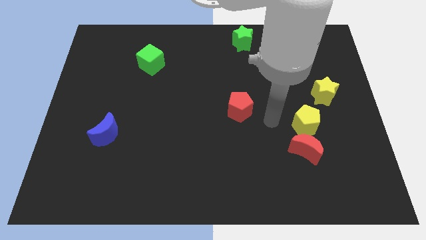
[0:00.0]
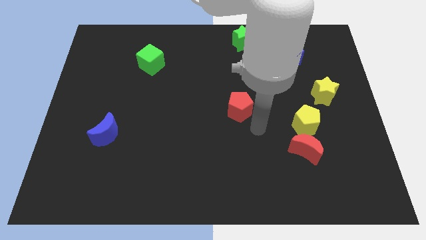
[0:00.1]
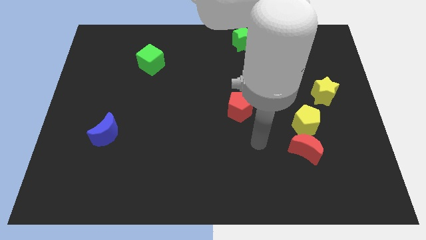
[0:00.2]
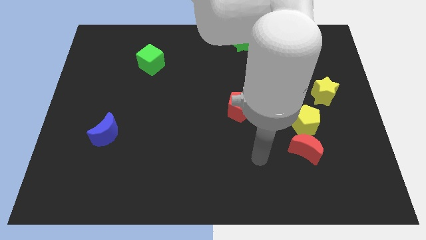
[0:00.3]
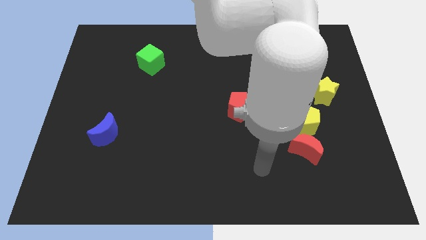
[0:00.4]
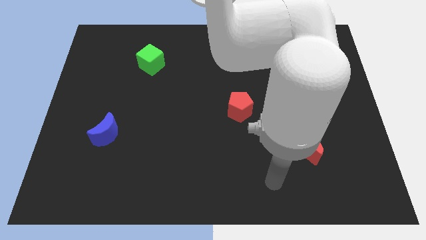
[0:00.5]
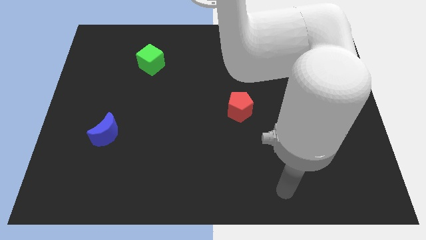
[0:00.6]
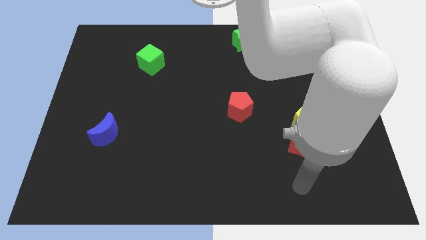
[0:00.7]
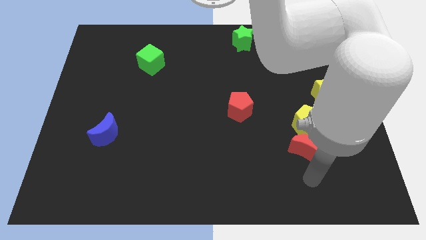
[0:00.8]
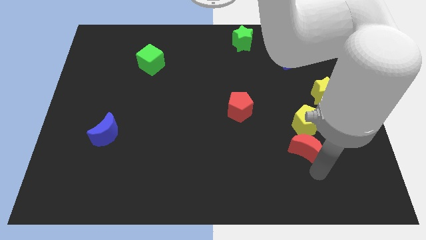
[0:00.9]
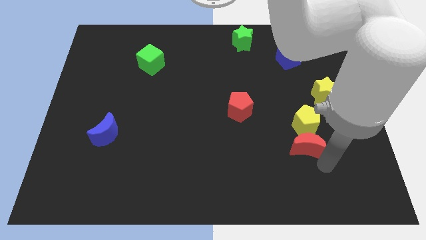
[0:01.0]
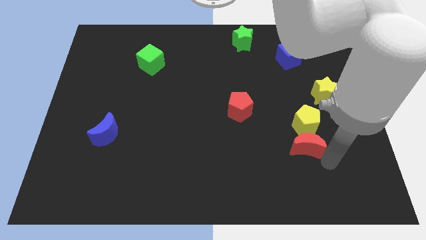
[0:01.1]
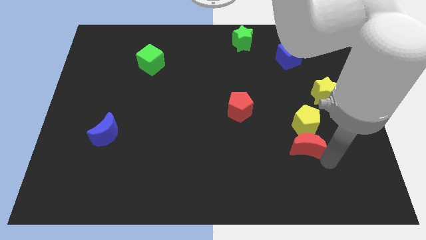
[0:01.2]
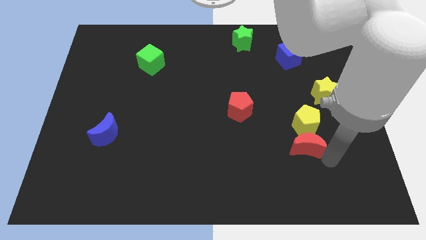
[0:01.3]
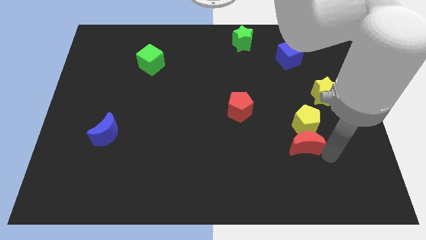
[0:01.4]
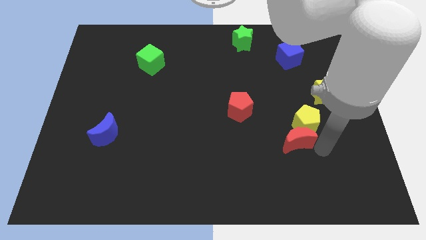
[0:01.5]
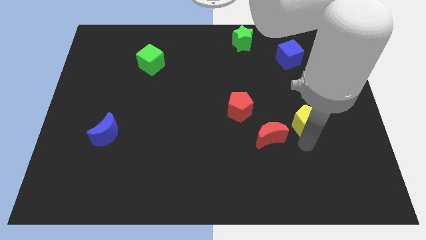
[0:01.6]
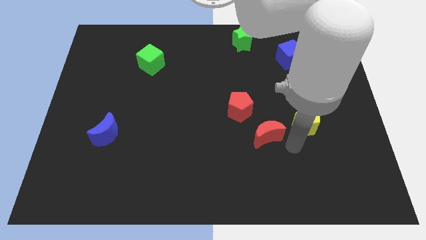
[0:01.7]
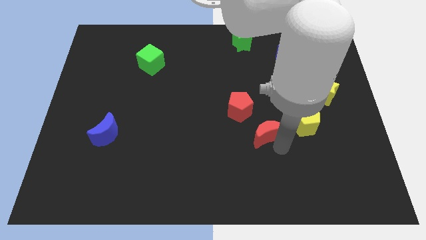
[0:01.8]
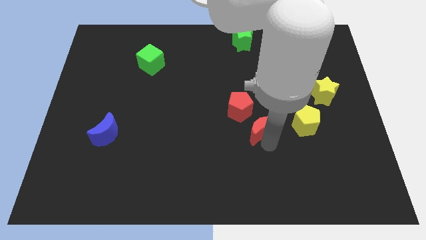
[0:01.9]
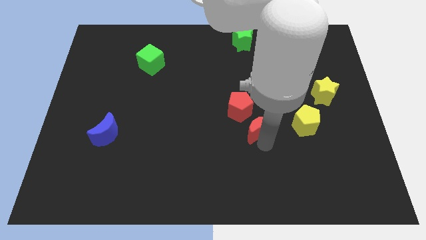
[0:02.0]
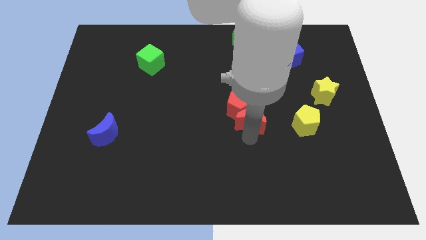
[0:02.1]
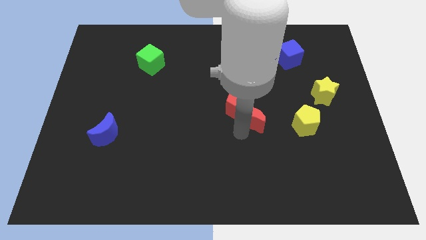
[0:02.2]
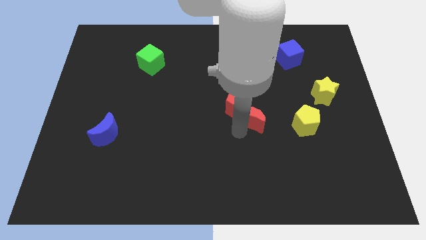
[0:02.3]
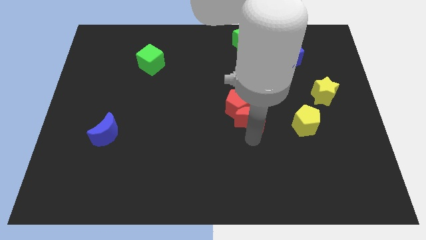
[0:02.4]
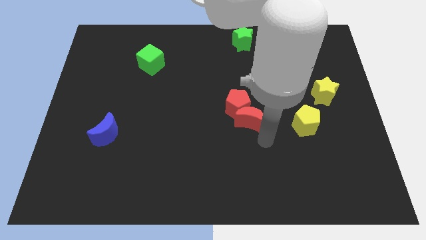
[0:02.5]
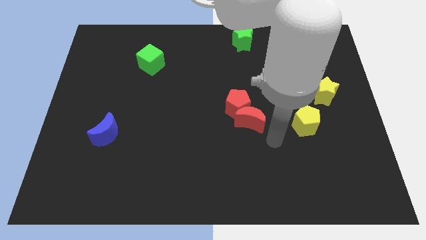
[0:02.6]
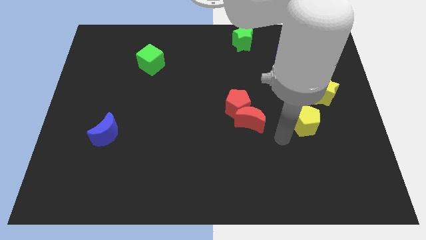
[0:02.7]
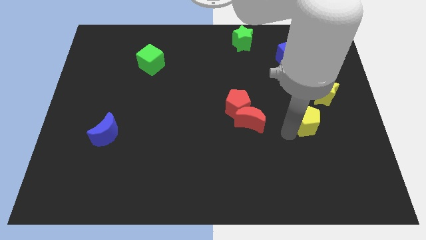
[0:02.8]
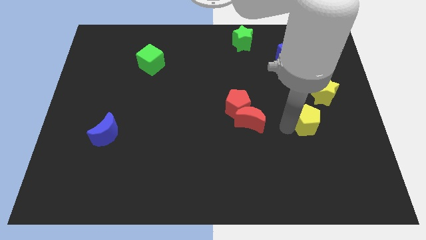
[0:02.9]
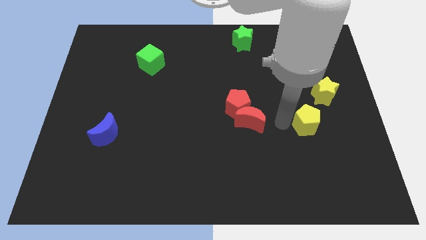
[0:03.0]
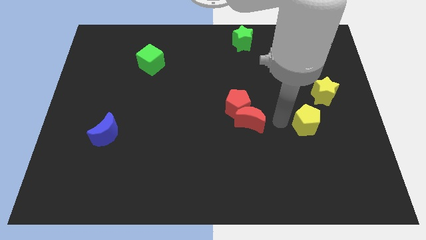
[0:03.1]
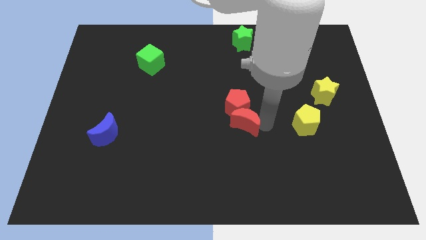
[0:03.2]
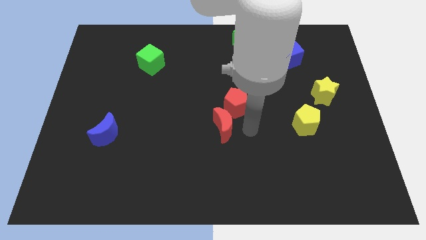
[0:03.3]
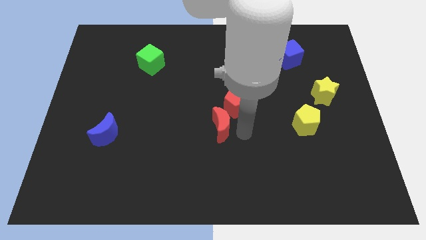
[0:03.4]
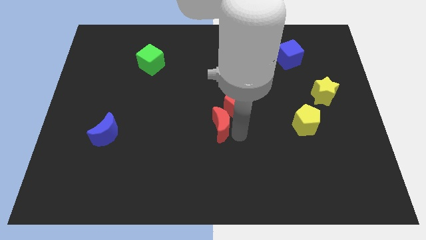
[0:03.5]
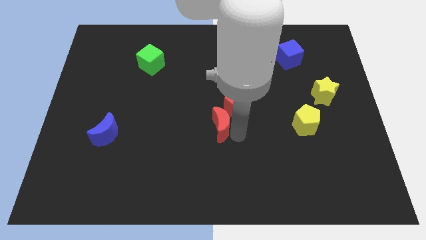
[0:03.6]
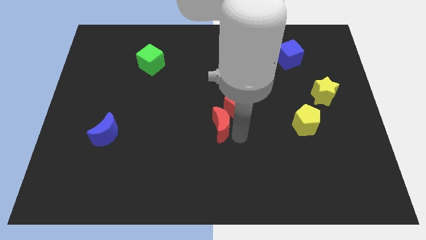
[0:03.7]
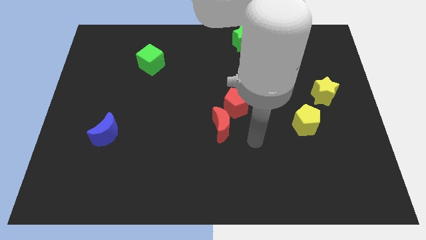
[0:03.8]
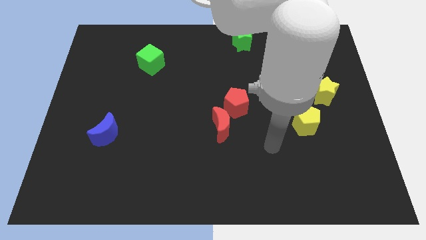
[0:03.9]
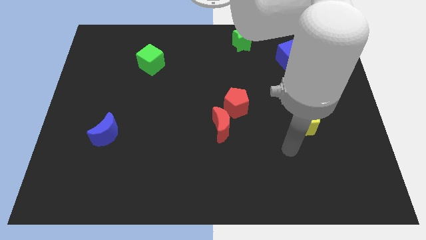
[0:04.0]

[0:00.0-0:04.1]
push red moon to the bottom left of red pentagon

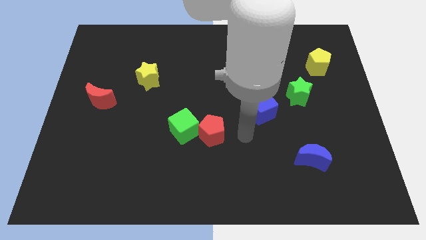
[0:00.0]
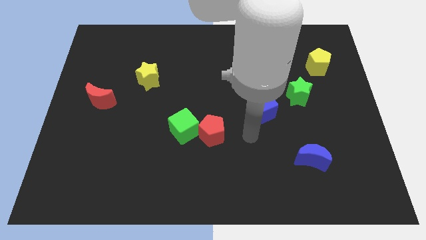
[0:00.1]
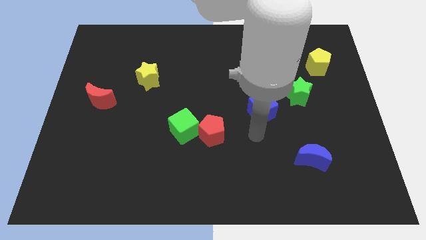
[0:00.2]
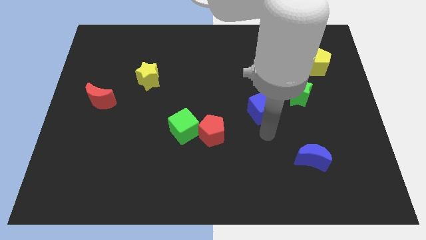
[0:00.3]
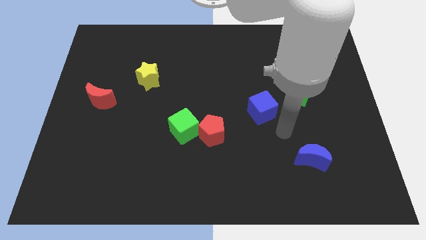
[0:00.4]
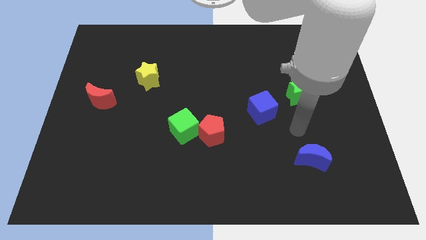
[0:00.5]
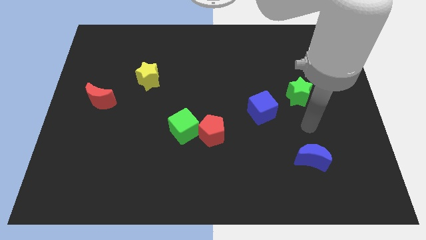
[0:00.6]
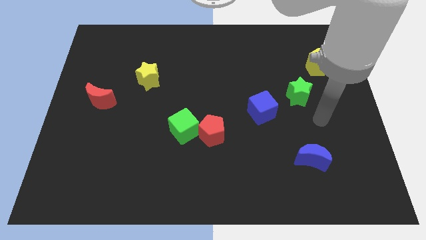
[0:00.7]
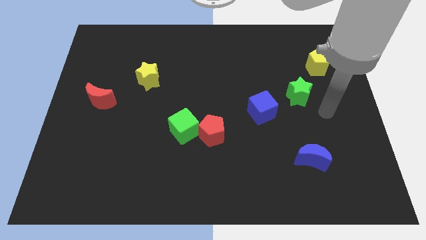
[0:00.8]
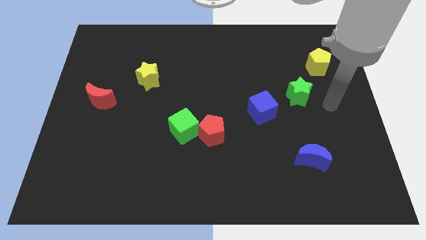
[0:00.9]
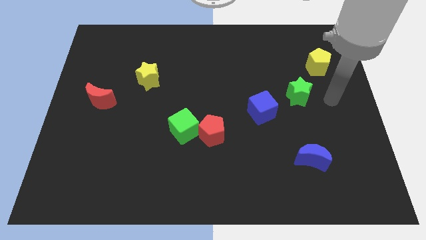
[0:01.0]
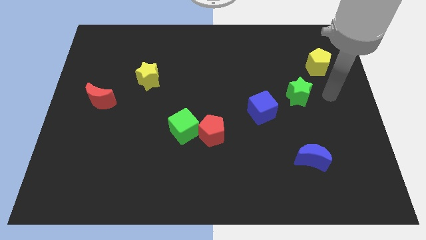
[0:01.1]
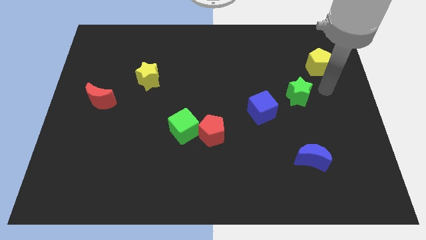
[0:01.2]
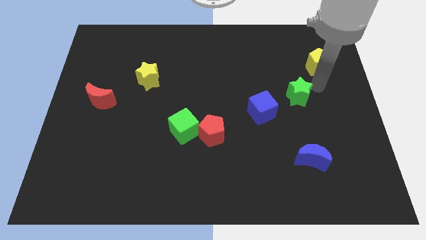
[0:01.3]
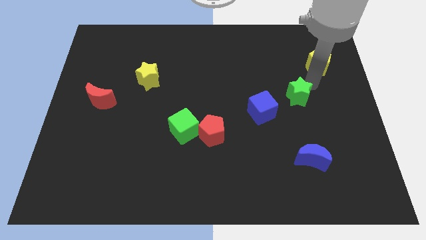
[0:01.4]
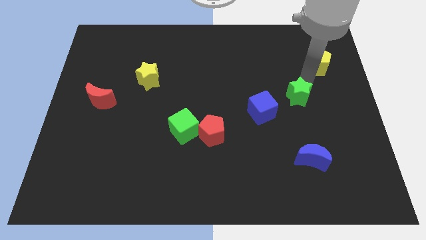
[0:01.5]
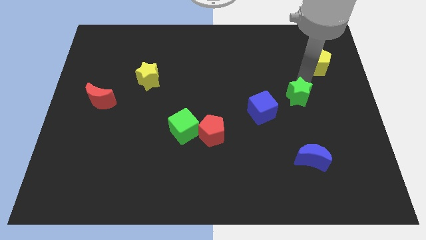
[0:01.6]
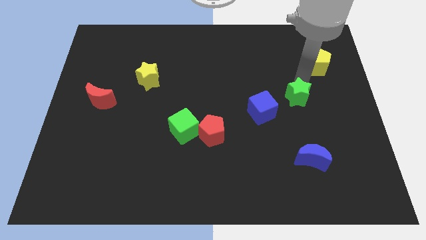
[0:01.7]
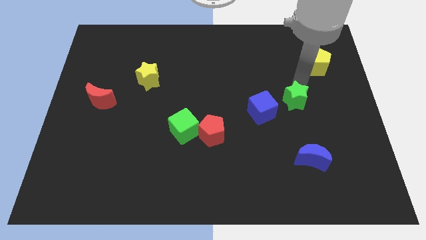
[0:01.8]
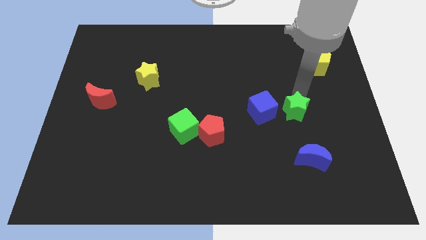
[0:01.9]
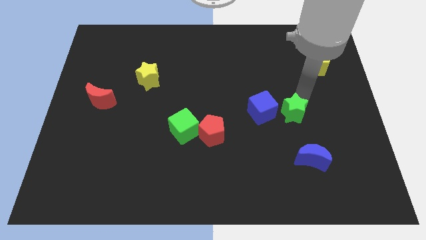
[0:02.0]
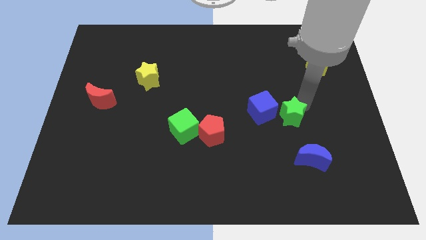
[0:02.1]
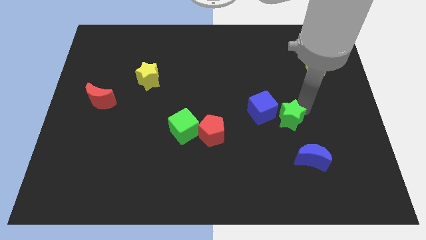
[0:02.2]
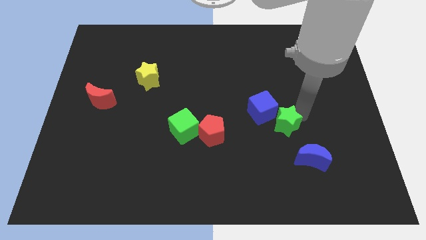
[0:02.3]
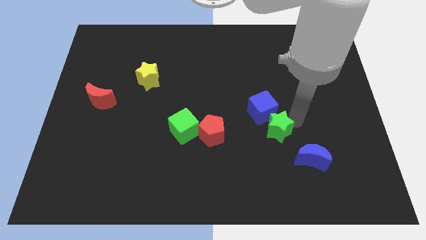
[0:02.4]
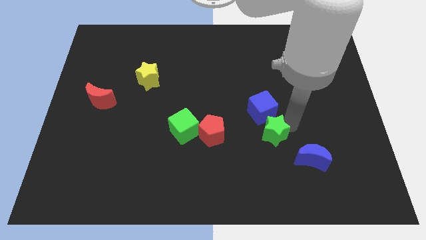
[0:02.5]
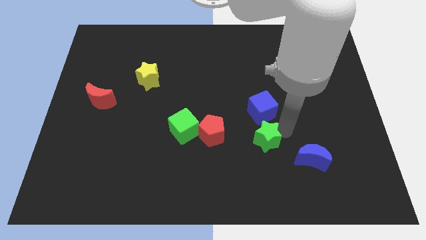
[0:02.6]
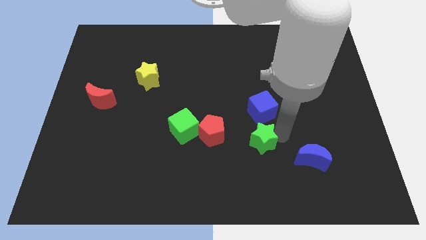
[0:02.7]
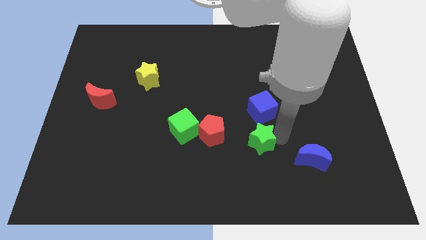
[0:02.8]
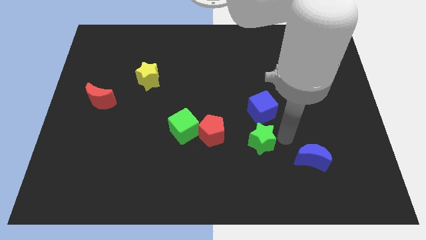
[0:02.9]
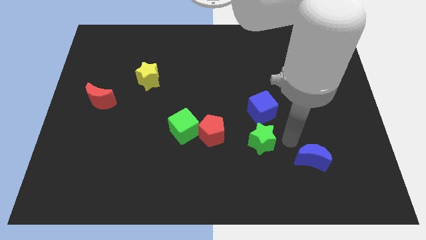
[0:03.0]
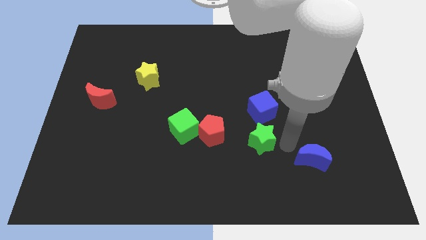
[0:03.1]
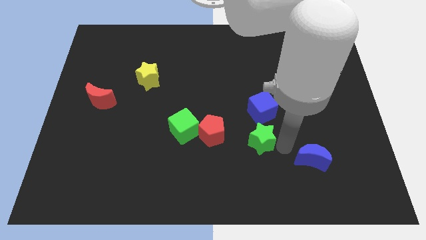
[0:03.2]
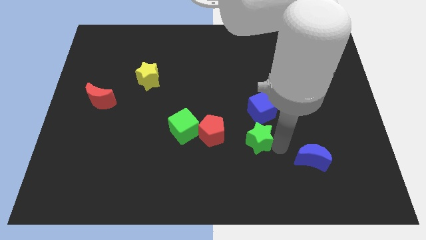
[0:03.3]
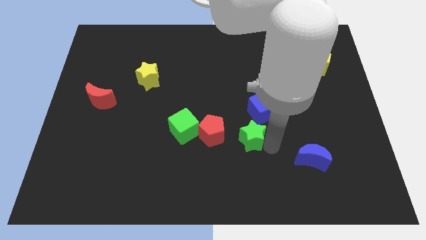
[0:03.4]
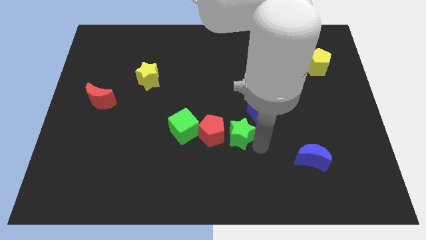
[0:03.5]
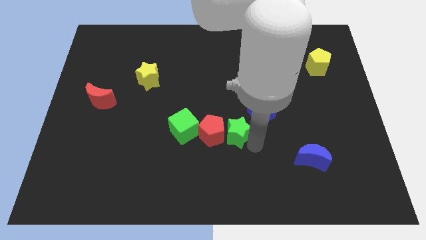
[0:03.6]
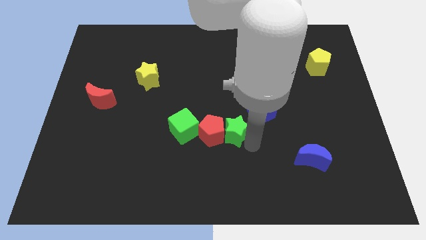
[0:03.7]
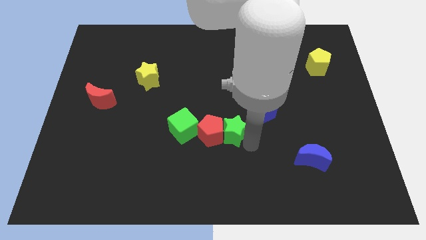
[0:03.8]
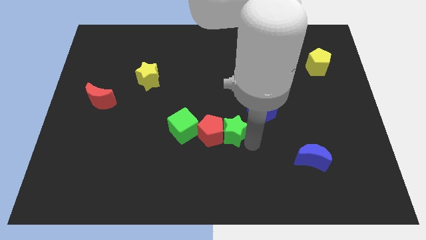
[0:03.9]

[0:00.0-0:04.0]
move the green star to the right of the red pentagon

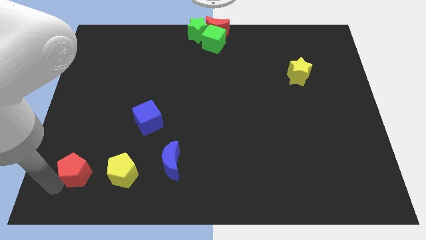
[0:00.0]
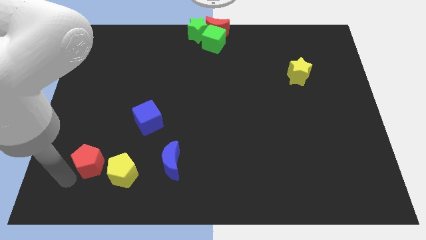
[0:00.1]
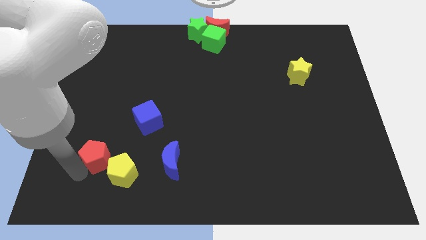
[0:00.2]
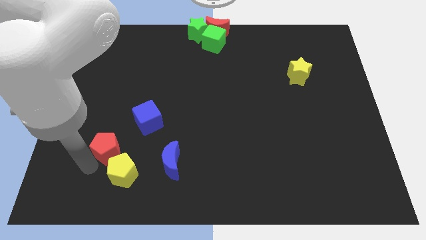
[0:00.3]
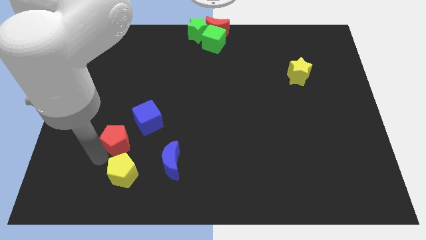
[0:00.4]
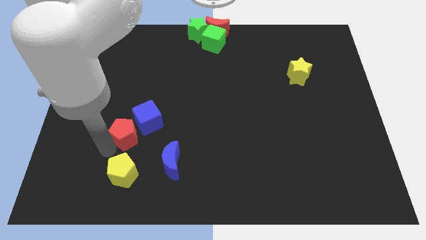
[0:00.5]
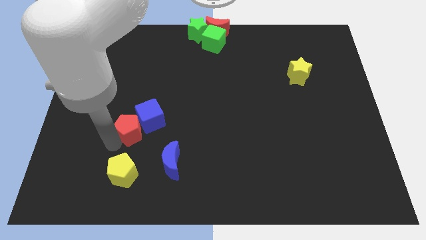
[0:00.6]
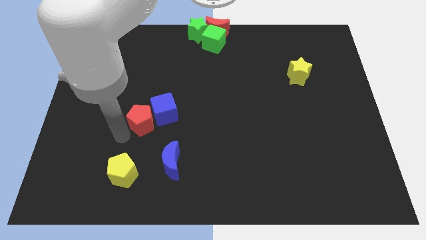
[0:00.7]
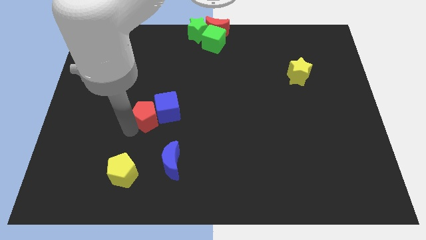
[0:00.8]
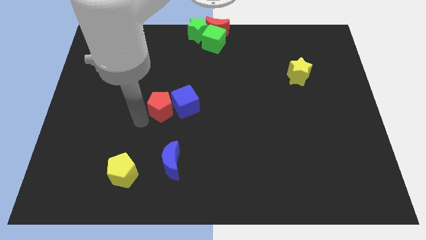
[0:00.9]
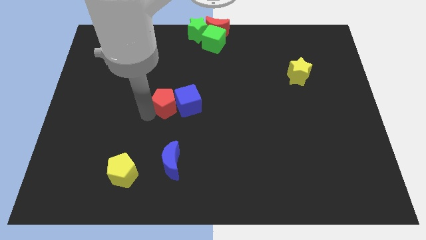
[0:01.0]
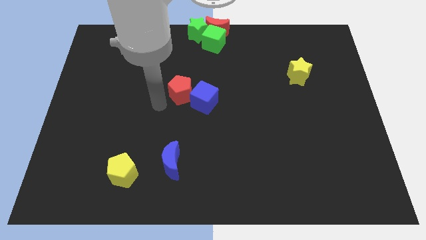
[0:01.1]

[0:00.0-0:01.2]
move the red pentagon and blue cube above the blue moon
